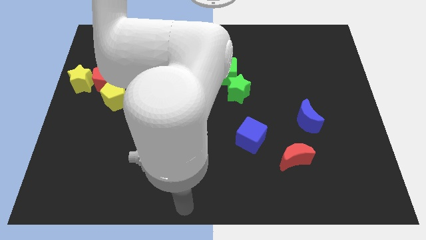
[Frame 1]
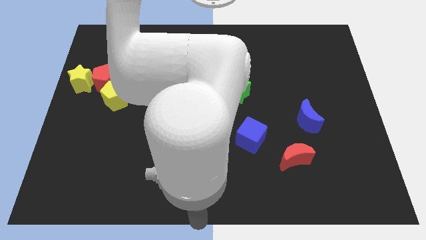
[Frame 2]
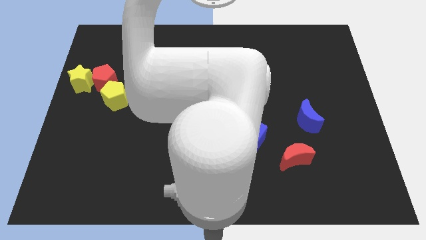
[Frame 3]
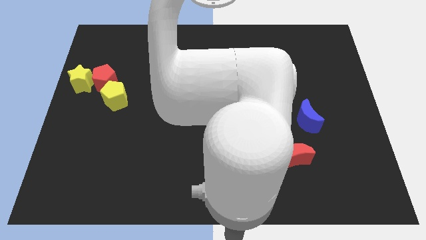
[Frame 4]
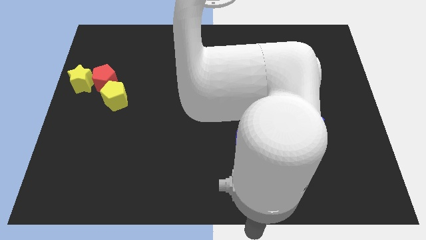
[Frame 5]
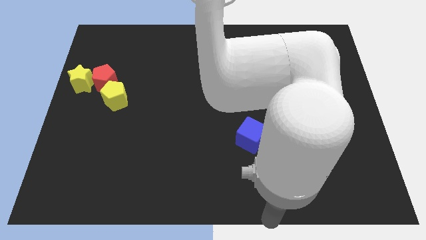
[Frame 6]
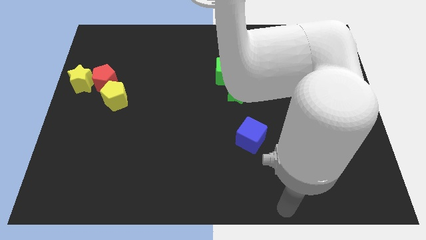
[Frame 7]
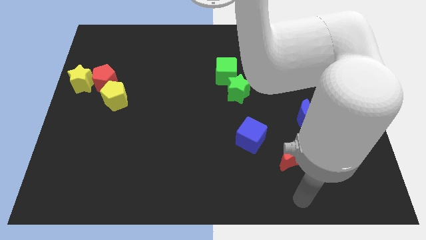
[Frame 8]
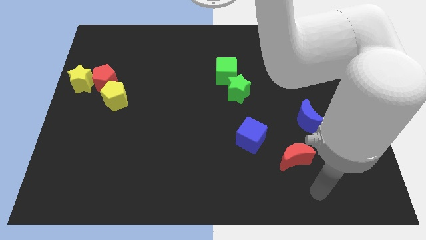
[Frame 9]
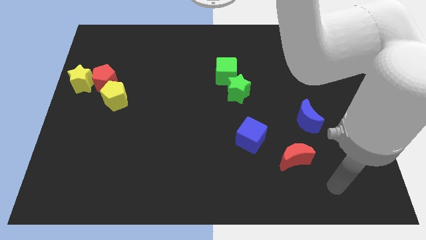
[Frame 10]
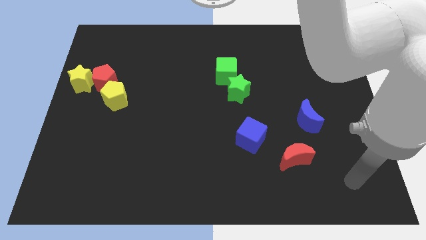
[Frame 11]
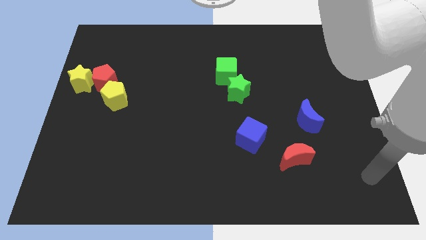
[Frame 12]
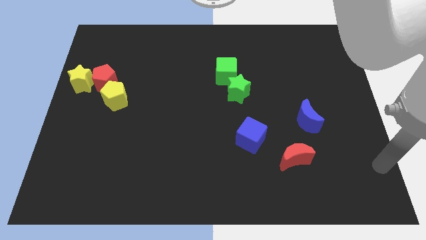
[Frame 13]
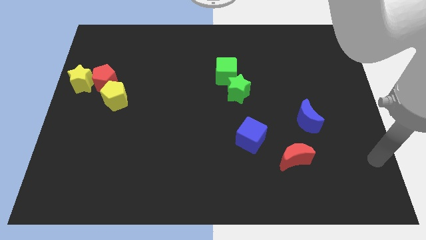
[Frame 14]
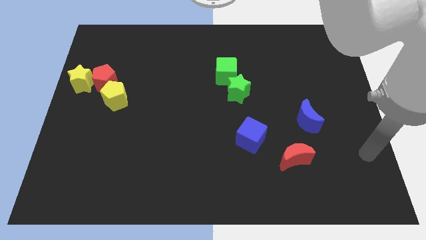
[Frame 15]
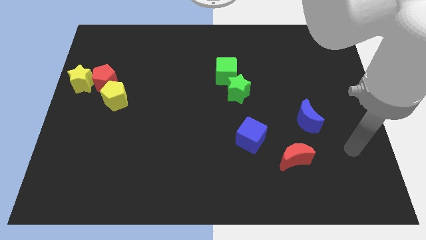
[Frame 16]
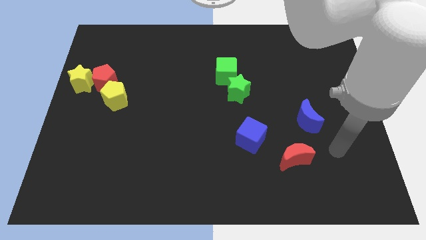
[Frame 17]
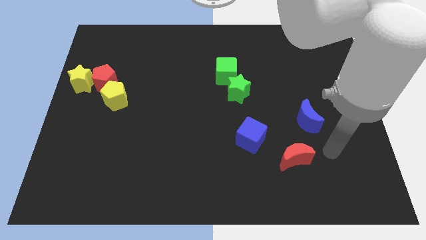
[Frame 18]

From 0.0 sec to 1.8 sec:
move your arm towards the red moon

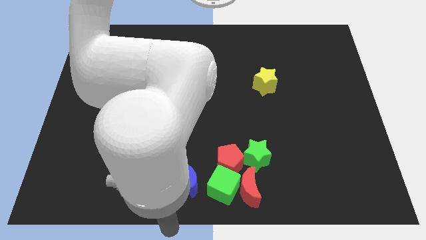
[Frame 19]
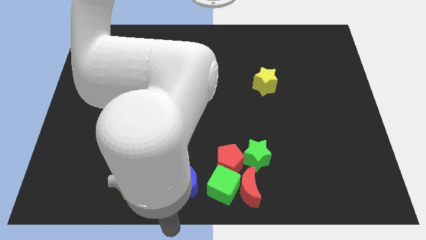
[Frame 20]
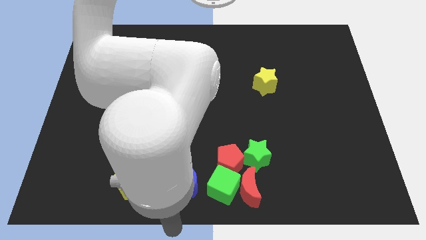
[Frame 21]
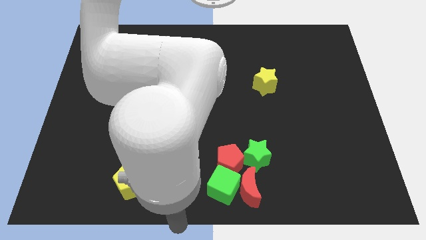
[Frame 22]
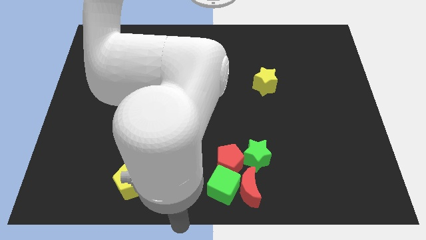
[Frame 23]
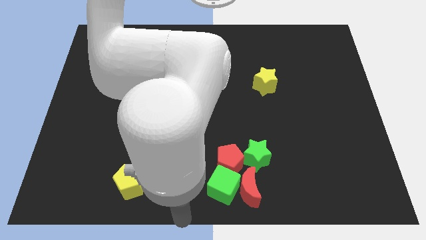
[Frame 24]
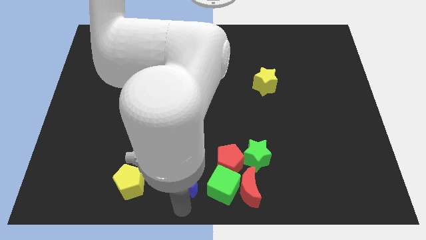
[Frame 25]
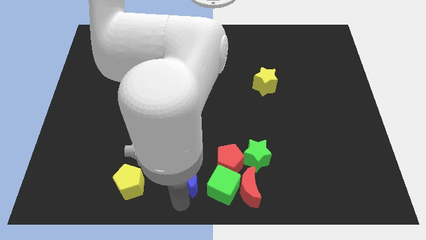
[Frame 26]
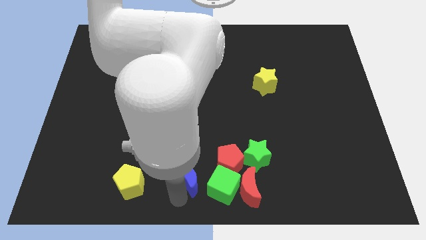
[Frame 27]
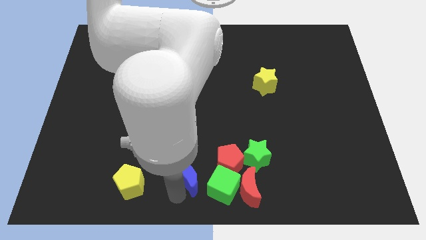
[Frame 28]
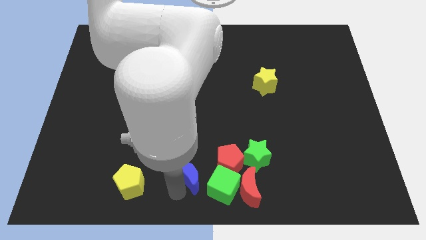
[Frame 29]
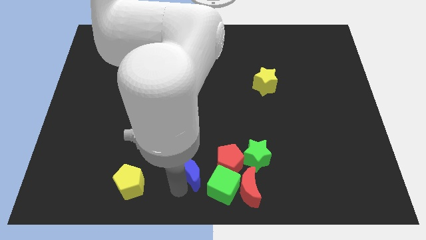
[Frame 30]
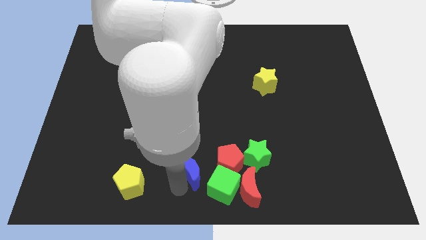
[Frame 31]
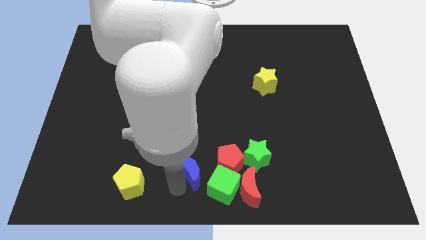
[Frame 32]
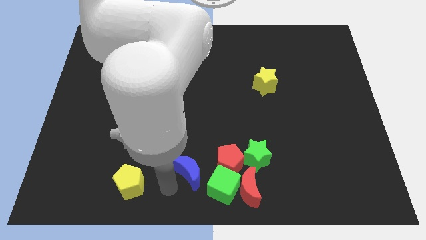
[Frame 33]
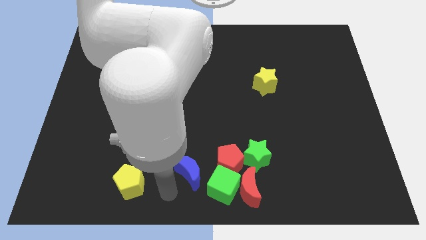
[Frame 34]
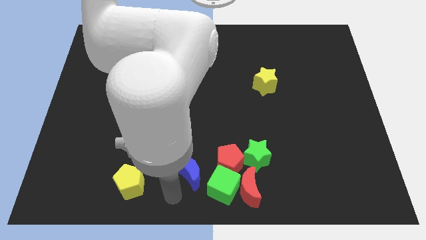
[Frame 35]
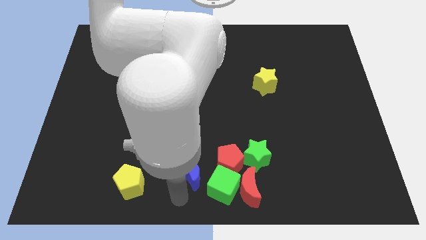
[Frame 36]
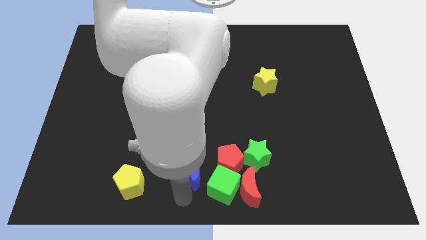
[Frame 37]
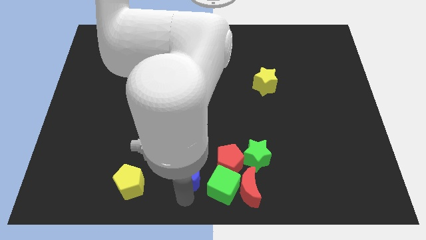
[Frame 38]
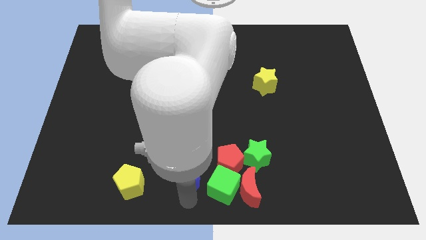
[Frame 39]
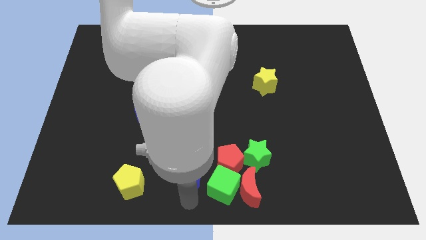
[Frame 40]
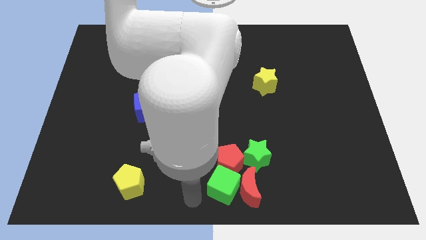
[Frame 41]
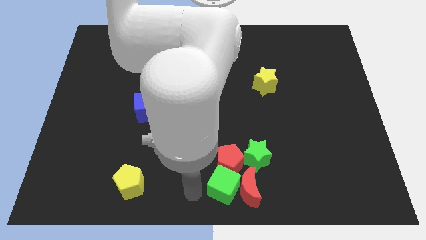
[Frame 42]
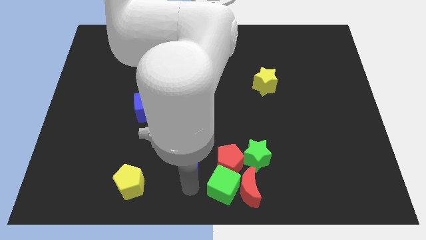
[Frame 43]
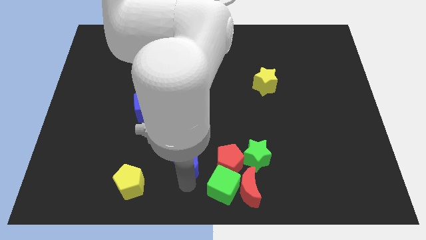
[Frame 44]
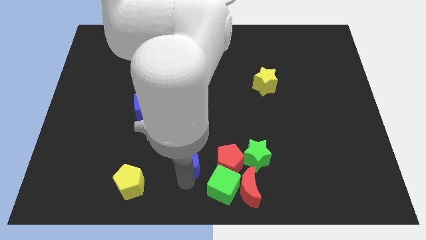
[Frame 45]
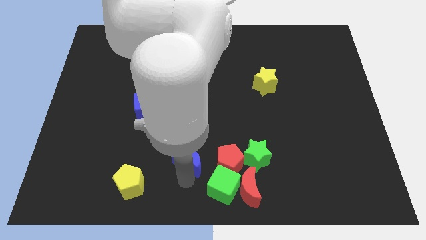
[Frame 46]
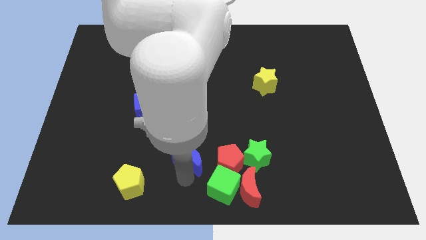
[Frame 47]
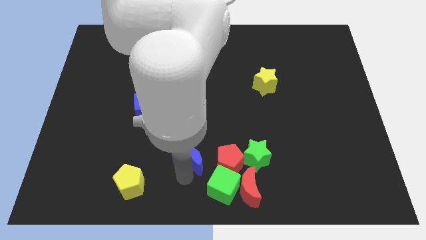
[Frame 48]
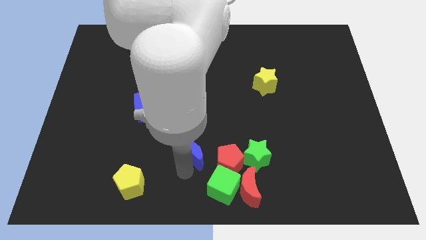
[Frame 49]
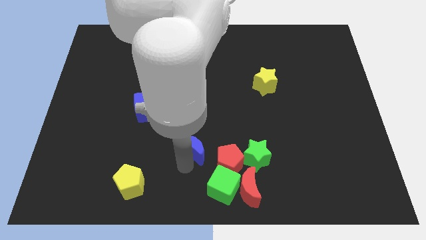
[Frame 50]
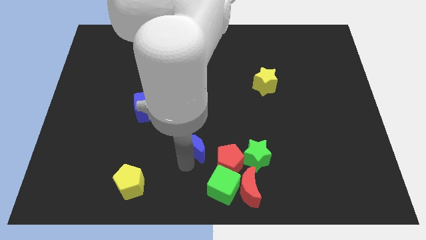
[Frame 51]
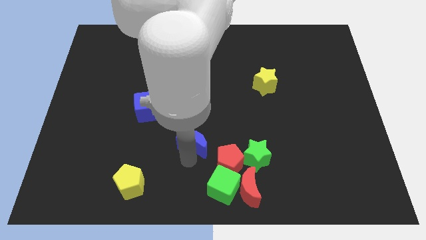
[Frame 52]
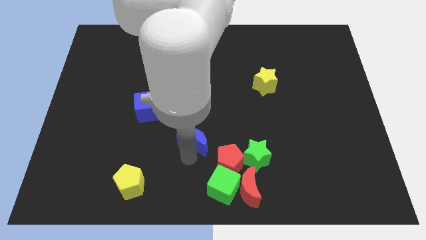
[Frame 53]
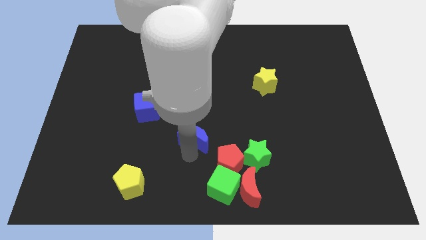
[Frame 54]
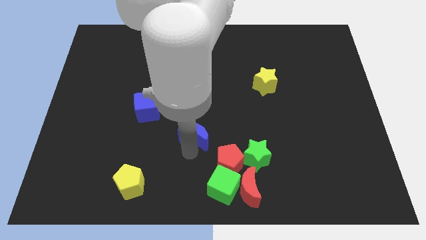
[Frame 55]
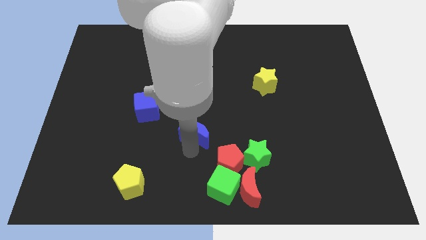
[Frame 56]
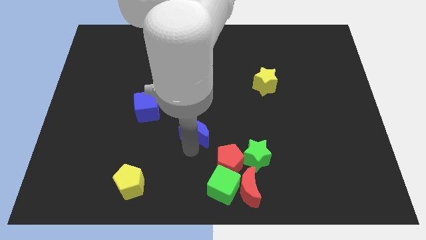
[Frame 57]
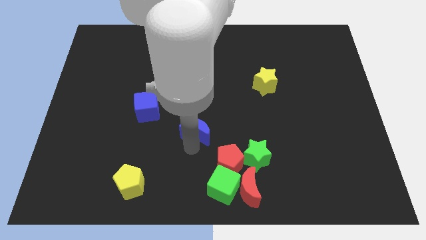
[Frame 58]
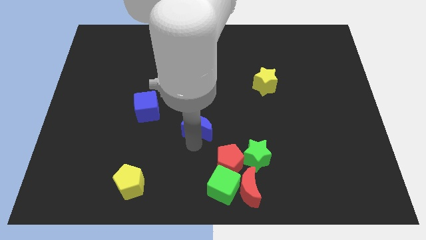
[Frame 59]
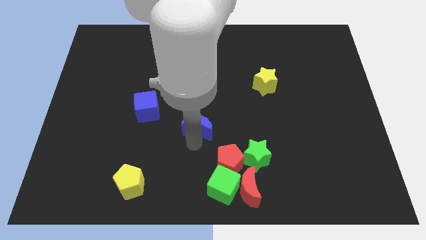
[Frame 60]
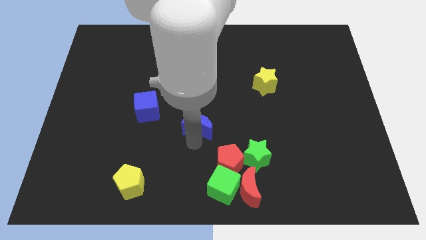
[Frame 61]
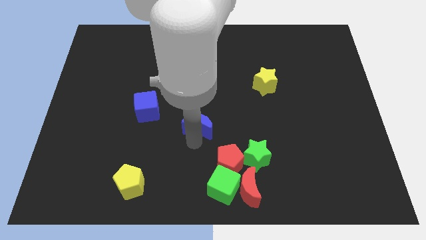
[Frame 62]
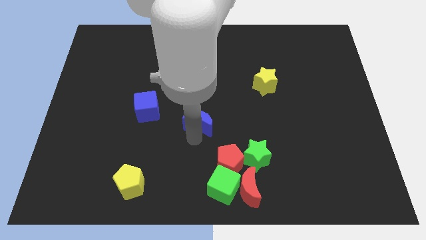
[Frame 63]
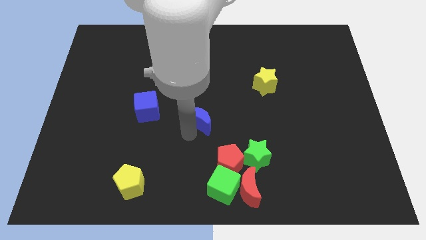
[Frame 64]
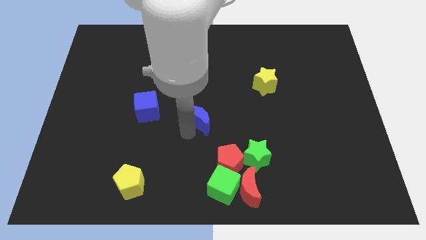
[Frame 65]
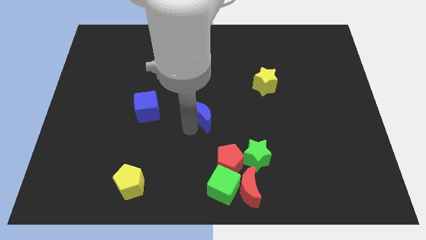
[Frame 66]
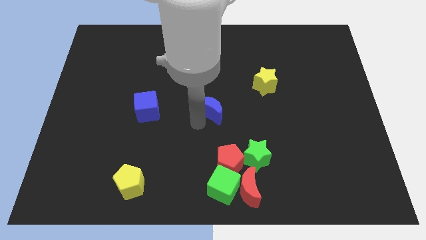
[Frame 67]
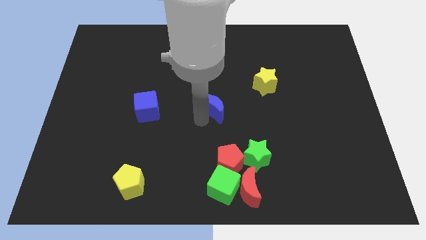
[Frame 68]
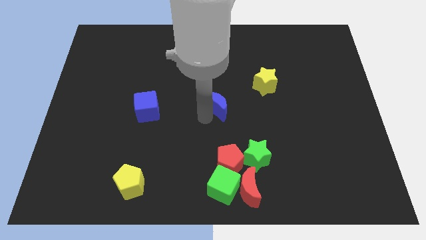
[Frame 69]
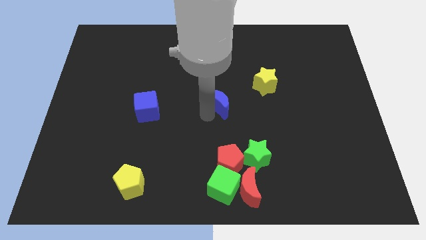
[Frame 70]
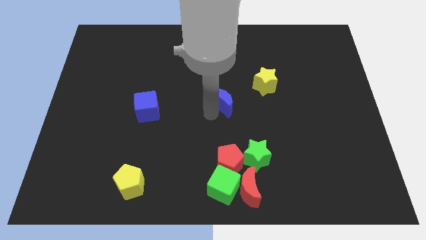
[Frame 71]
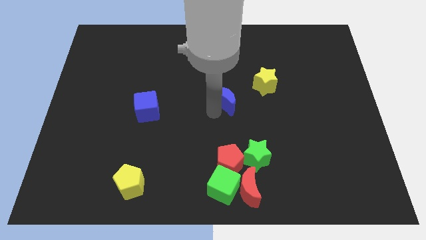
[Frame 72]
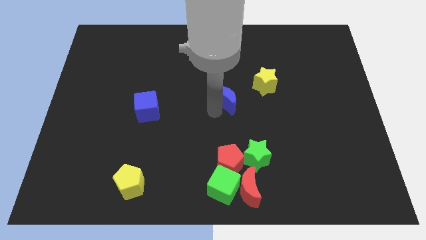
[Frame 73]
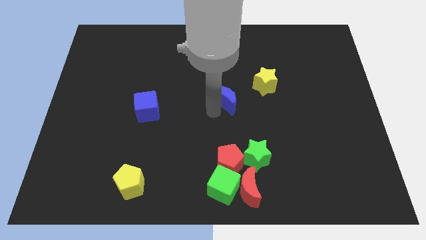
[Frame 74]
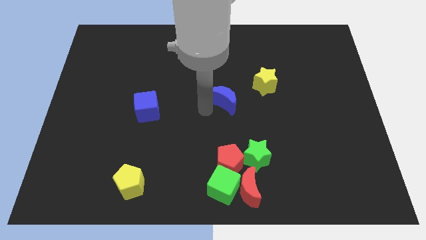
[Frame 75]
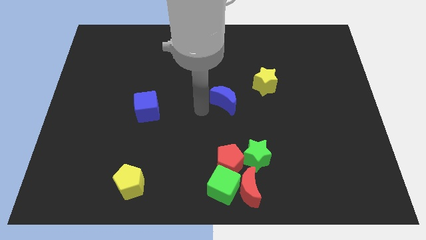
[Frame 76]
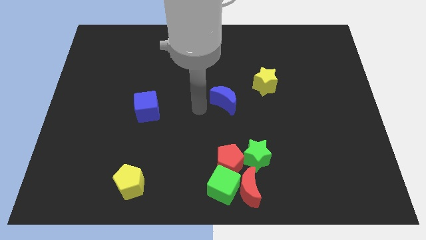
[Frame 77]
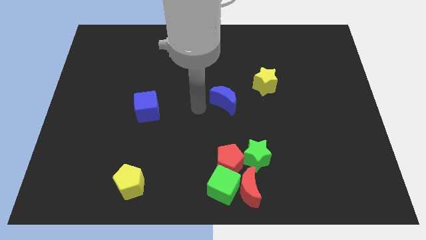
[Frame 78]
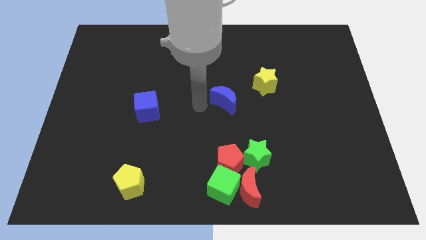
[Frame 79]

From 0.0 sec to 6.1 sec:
place blue moon at the center of the board

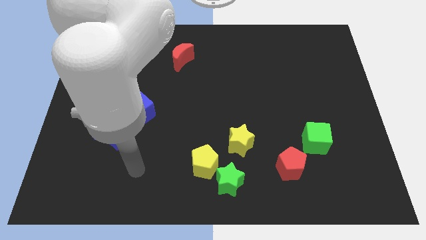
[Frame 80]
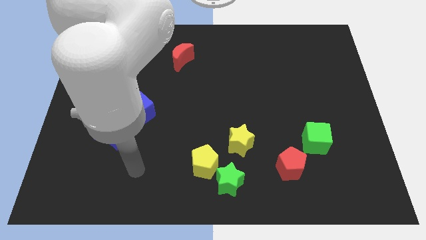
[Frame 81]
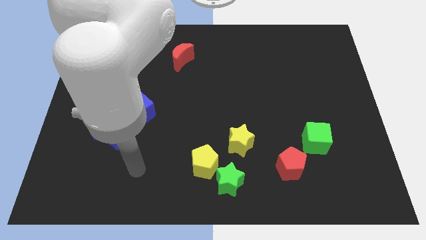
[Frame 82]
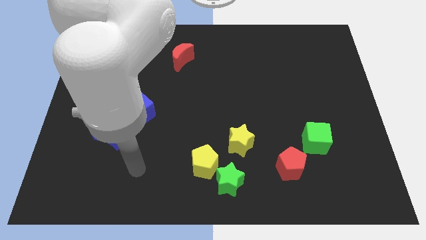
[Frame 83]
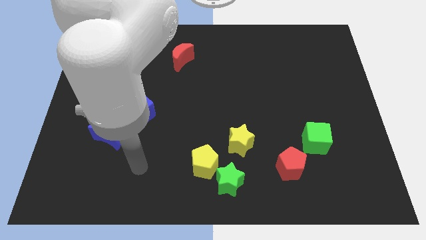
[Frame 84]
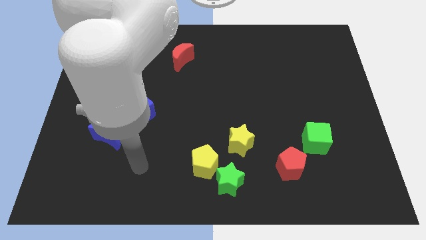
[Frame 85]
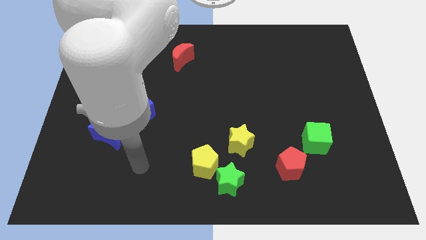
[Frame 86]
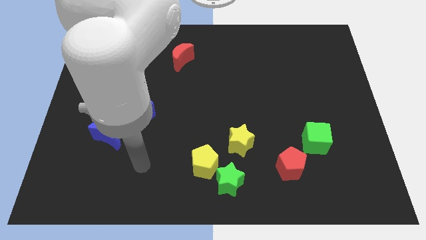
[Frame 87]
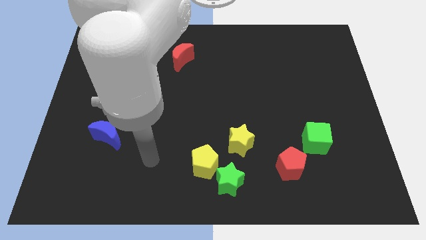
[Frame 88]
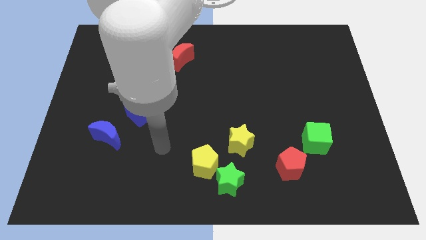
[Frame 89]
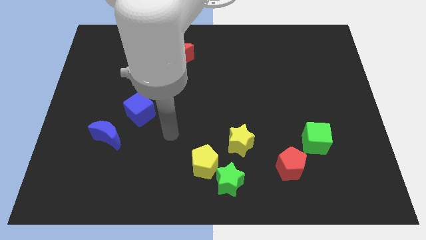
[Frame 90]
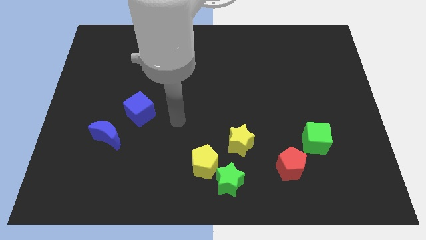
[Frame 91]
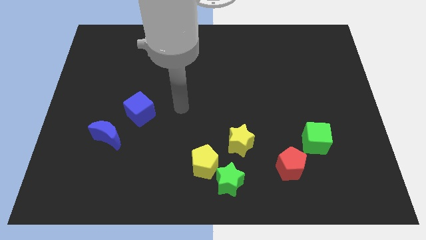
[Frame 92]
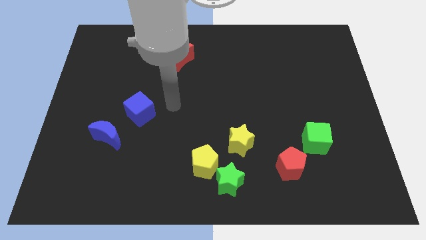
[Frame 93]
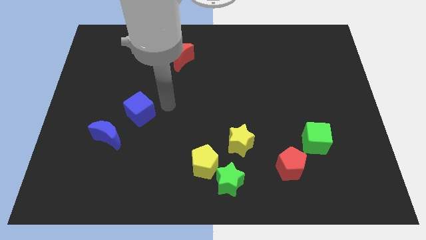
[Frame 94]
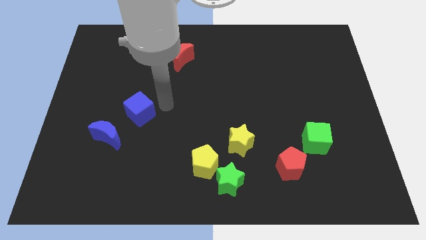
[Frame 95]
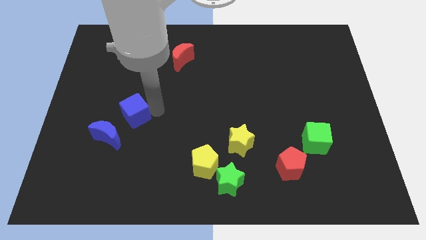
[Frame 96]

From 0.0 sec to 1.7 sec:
move your arm near to the blue cube
